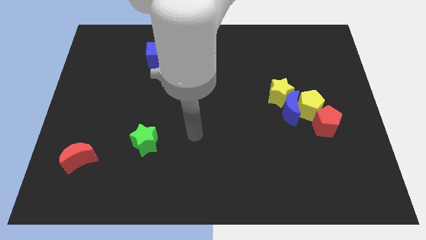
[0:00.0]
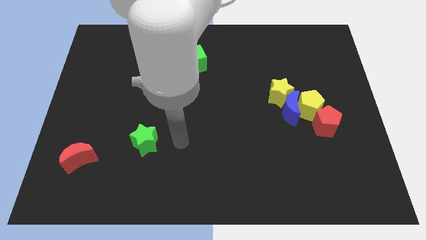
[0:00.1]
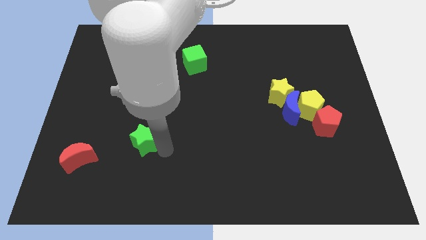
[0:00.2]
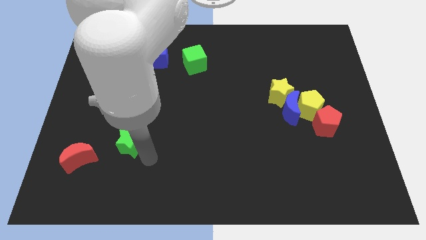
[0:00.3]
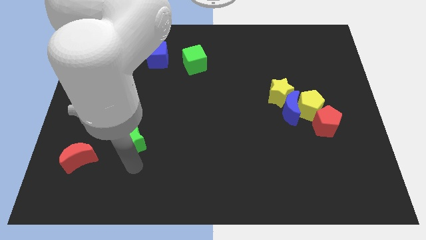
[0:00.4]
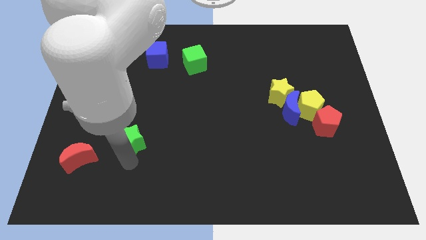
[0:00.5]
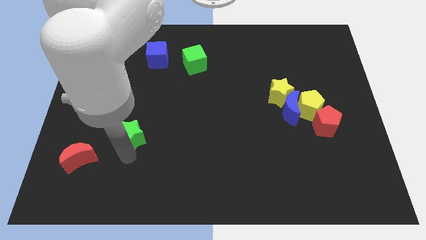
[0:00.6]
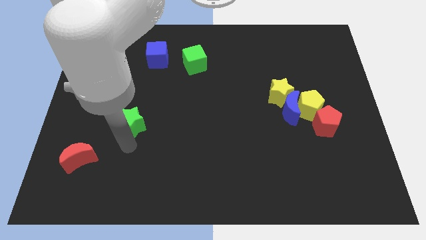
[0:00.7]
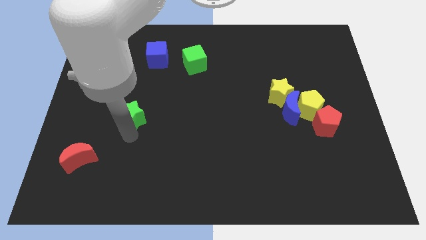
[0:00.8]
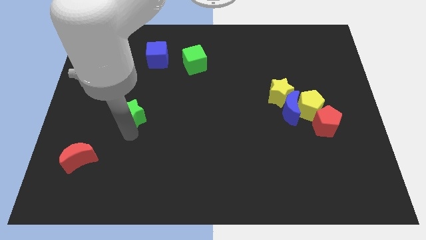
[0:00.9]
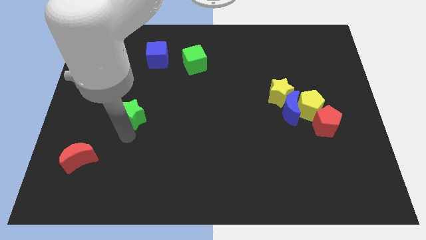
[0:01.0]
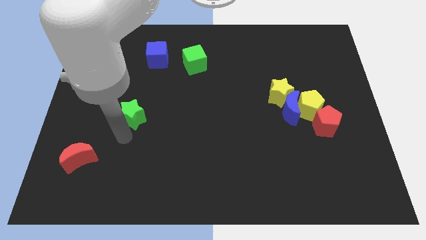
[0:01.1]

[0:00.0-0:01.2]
move the green star towards blue cube

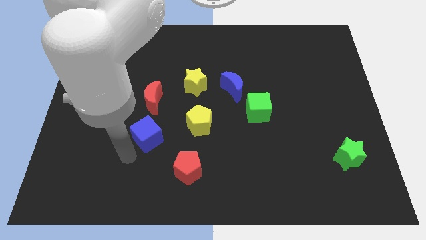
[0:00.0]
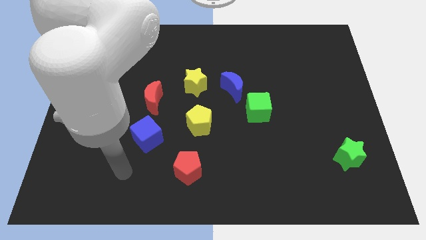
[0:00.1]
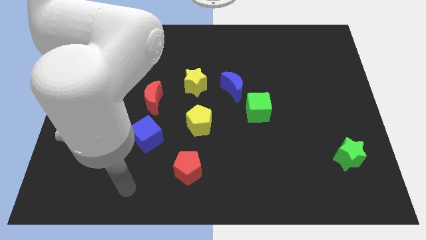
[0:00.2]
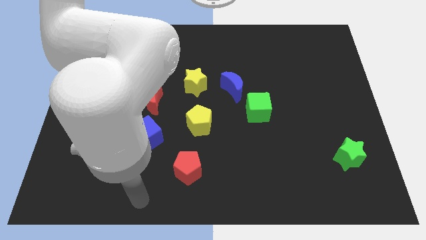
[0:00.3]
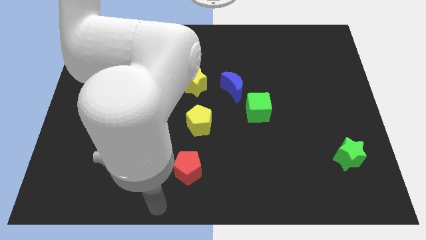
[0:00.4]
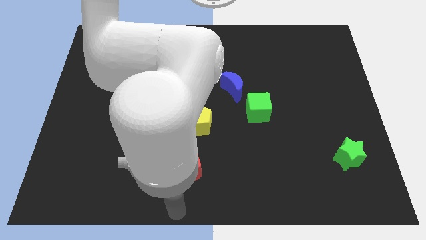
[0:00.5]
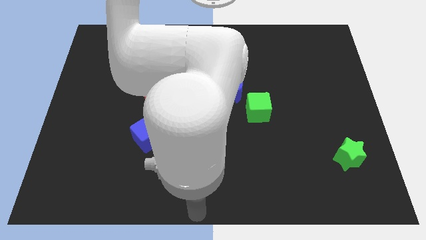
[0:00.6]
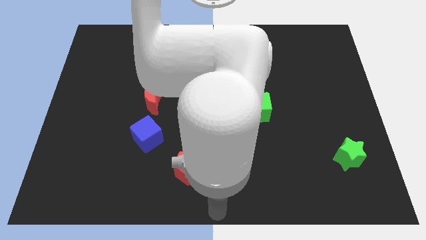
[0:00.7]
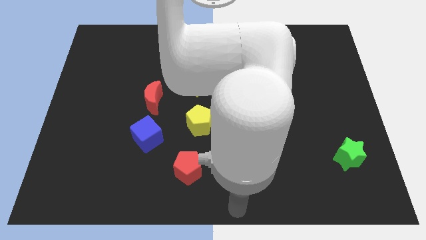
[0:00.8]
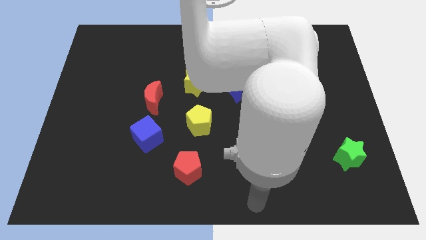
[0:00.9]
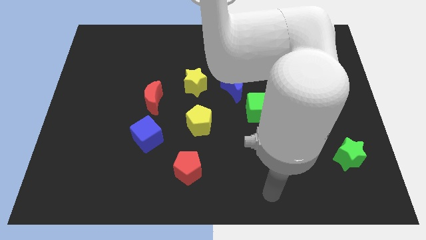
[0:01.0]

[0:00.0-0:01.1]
go away from the blue cube

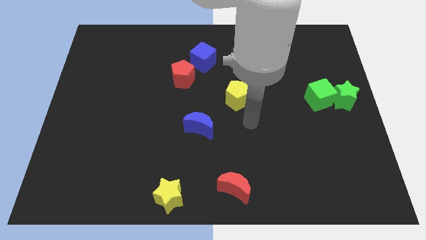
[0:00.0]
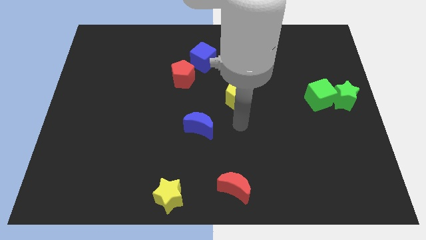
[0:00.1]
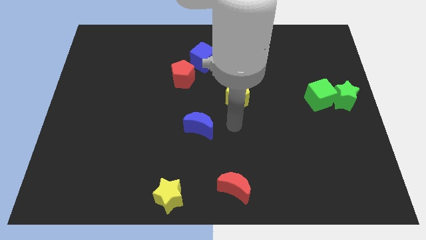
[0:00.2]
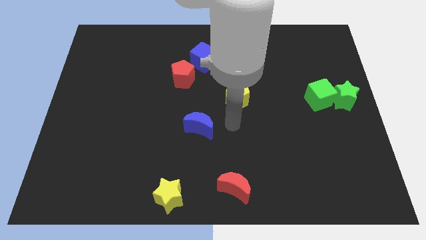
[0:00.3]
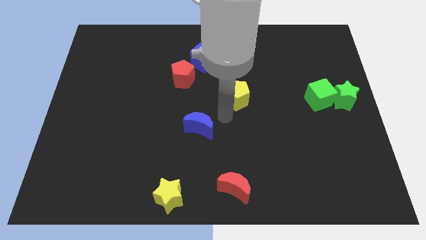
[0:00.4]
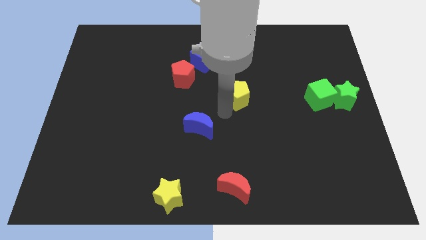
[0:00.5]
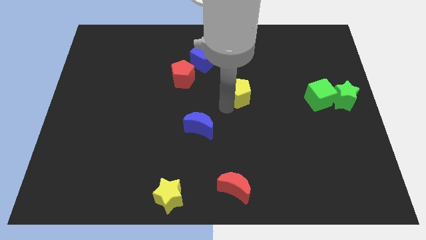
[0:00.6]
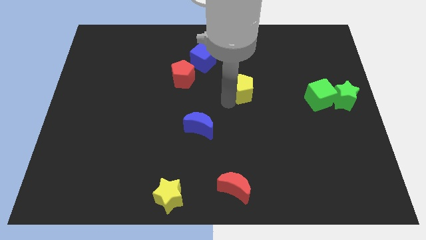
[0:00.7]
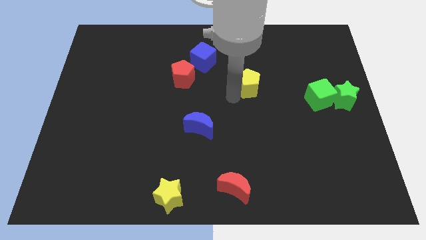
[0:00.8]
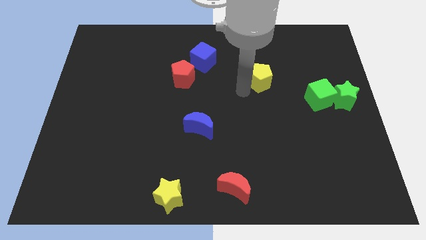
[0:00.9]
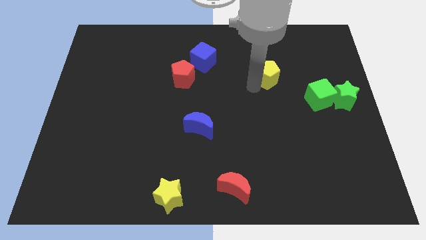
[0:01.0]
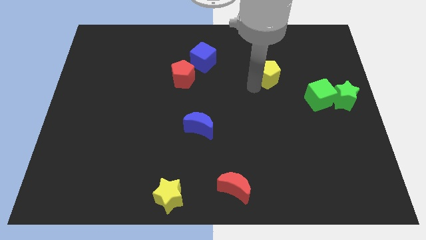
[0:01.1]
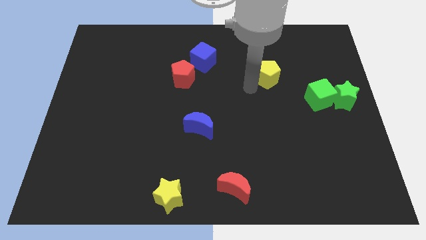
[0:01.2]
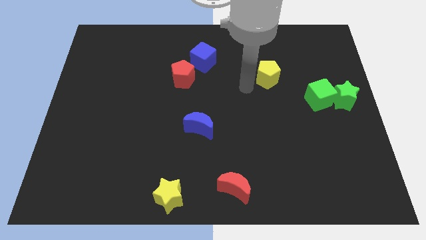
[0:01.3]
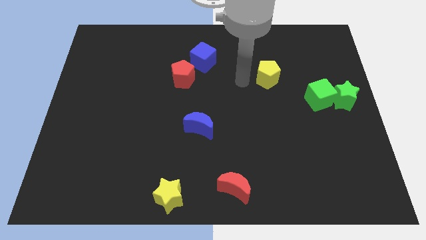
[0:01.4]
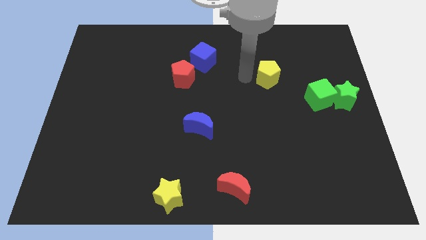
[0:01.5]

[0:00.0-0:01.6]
push the yellow pentagon to the right side of the board

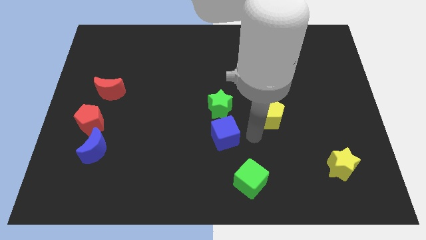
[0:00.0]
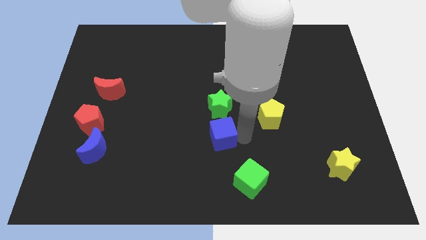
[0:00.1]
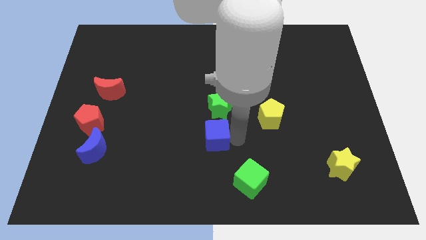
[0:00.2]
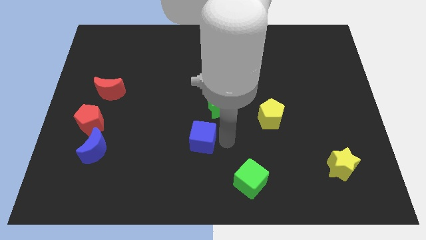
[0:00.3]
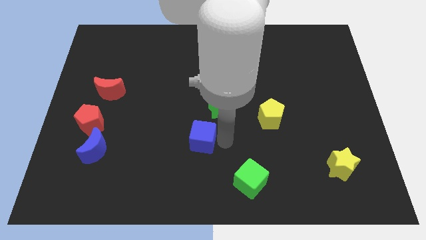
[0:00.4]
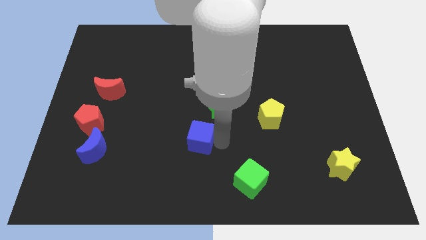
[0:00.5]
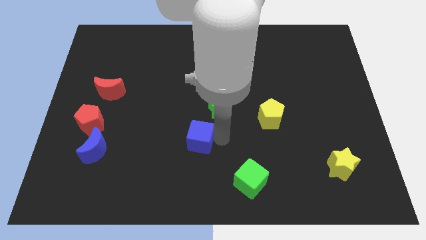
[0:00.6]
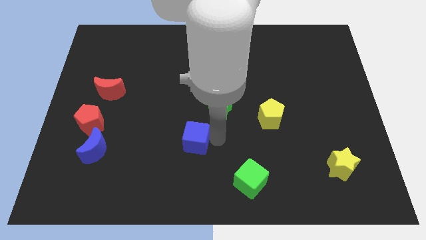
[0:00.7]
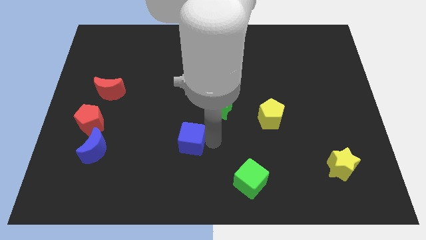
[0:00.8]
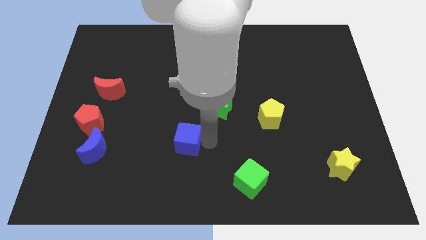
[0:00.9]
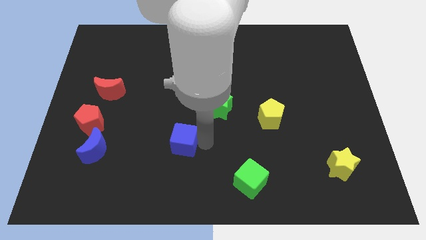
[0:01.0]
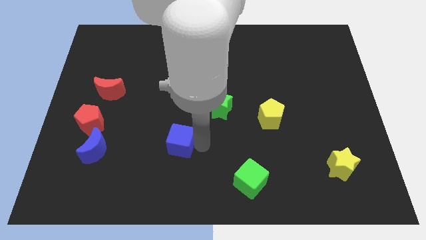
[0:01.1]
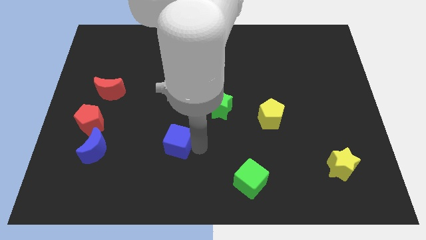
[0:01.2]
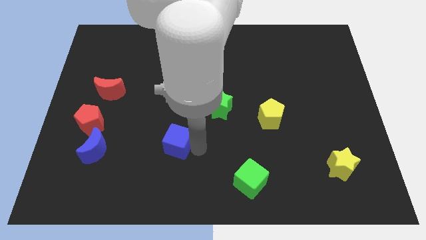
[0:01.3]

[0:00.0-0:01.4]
push the blue cube slightly to the left

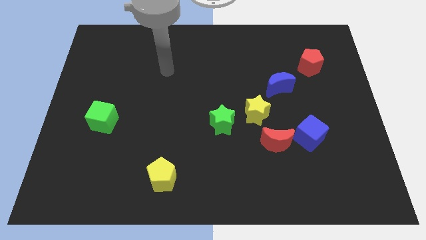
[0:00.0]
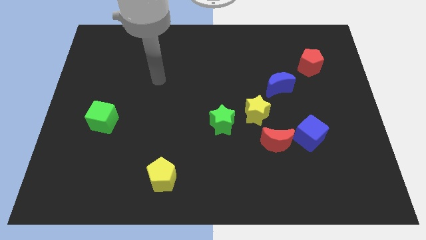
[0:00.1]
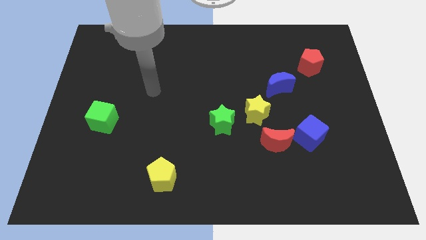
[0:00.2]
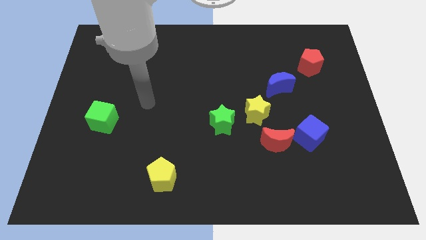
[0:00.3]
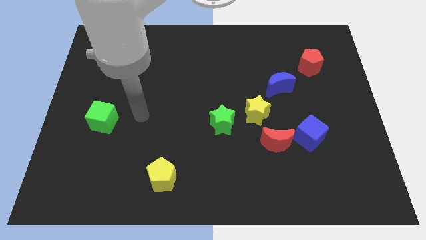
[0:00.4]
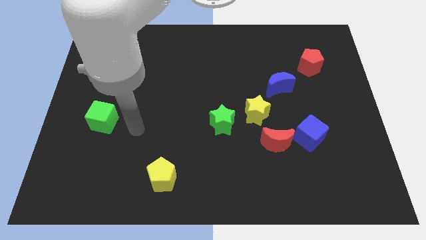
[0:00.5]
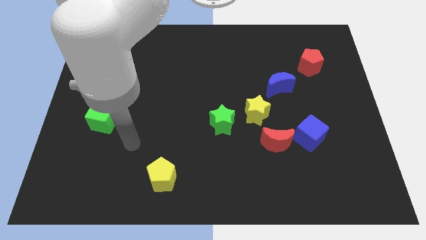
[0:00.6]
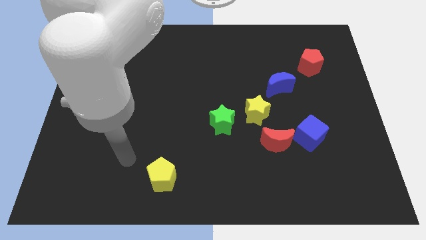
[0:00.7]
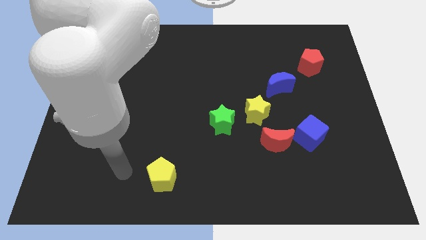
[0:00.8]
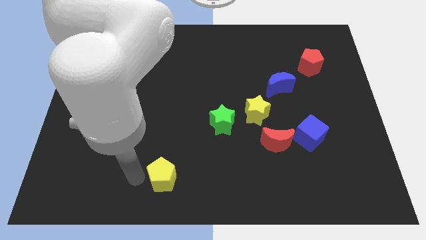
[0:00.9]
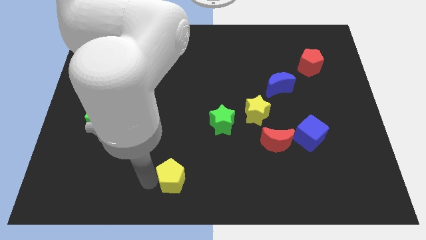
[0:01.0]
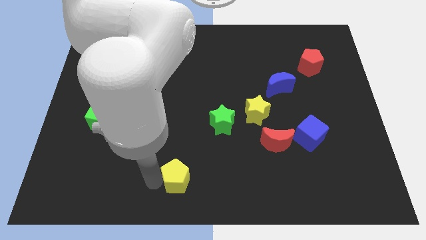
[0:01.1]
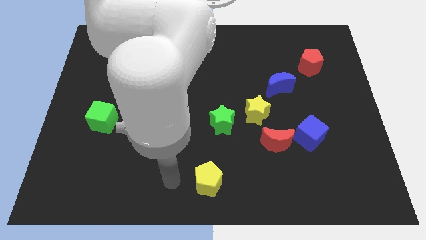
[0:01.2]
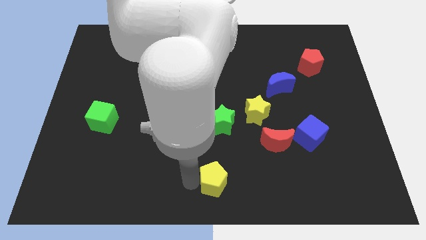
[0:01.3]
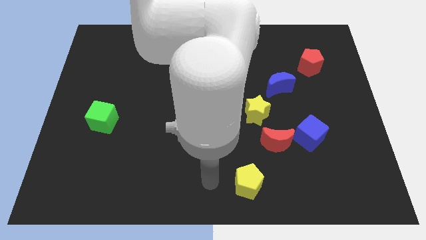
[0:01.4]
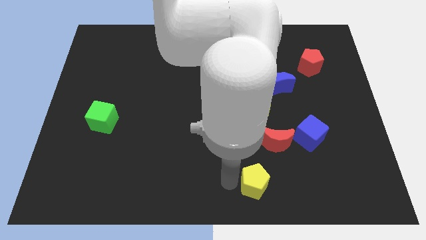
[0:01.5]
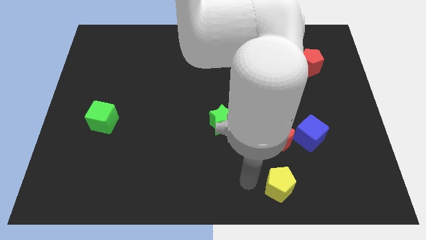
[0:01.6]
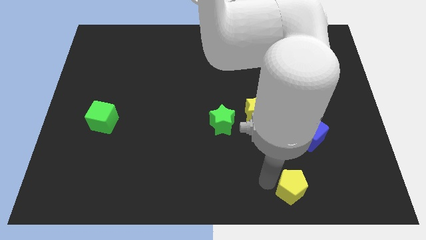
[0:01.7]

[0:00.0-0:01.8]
place the yellow pentagon below the red moon

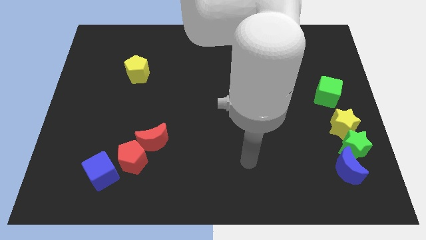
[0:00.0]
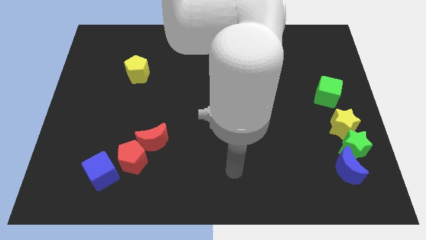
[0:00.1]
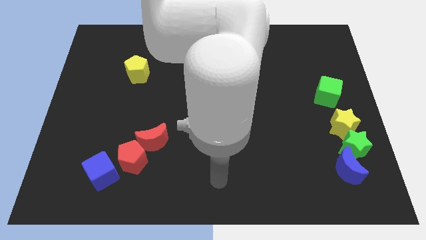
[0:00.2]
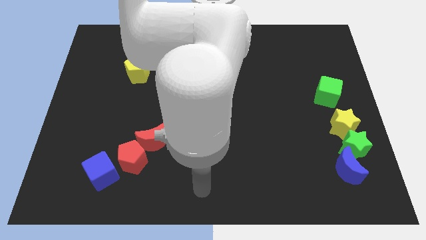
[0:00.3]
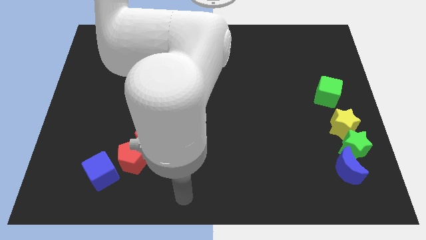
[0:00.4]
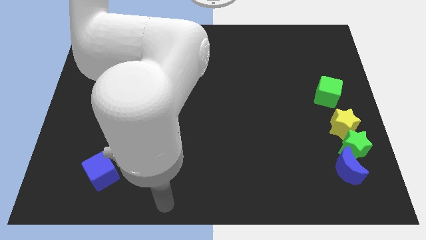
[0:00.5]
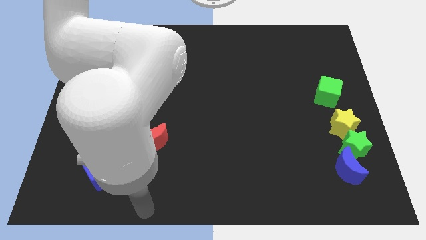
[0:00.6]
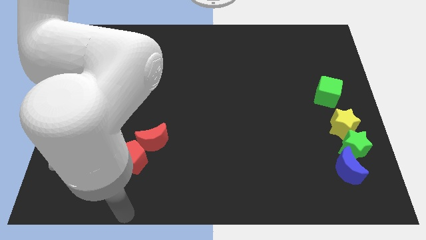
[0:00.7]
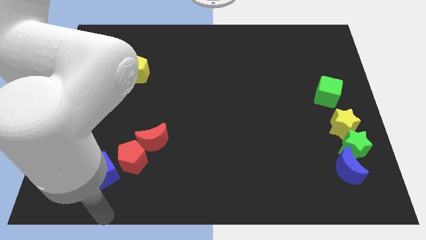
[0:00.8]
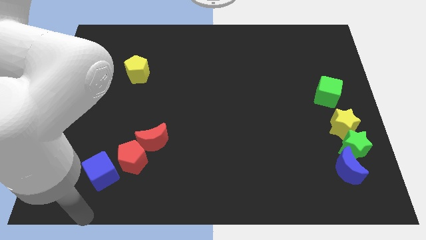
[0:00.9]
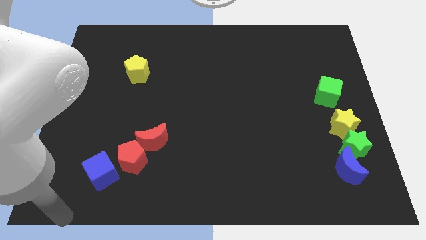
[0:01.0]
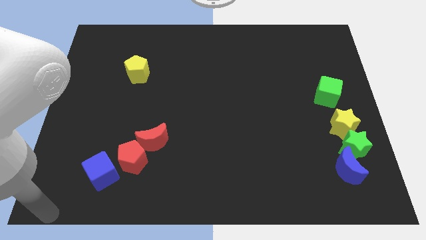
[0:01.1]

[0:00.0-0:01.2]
move your hand away from the green cube

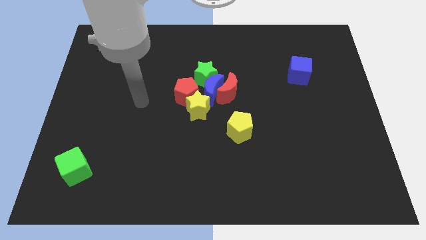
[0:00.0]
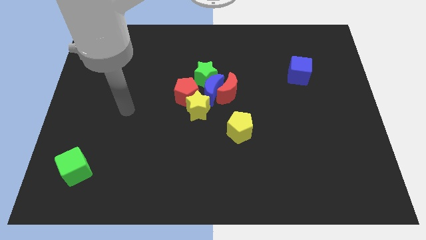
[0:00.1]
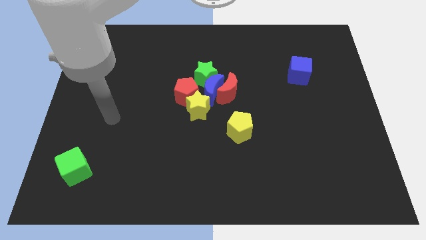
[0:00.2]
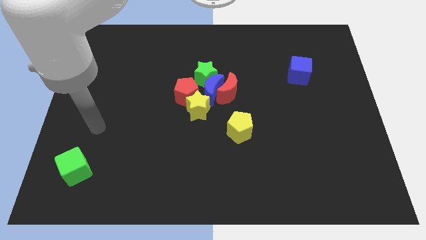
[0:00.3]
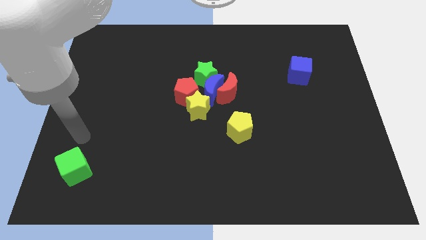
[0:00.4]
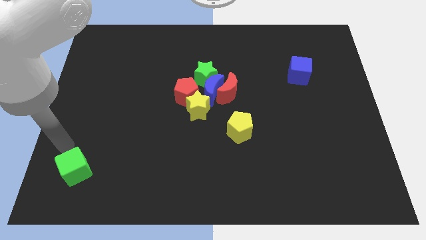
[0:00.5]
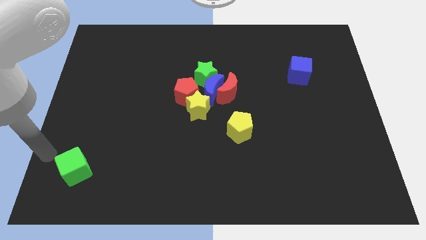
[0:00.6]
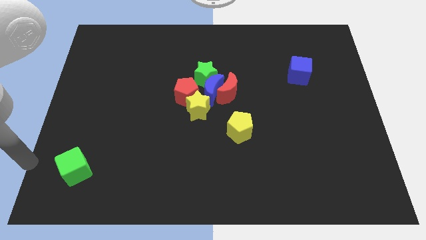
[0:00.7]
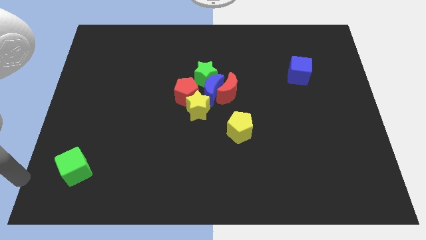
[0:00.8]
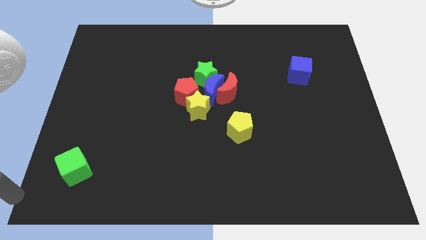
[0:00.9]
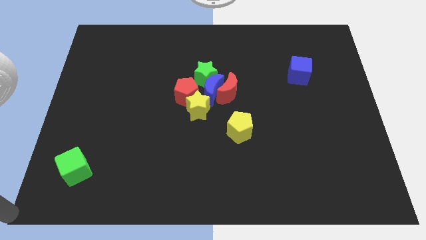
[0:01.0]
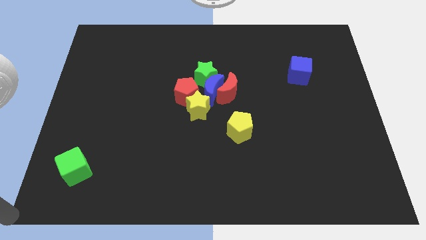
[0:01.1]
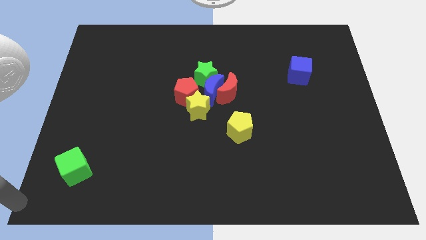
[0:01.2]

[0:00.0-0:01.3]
place the arm at the bottom left corner of the board
